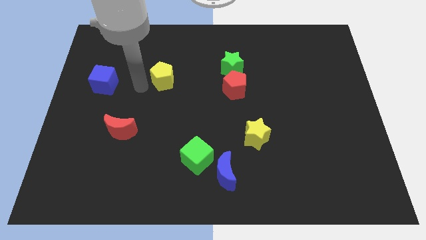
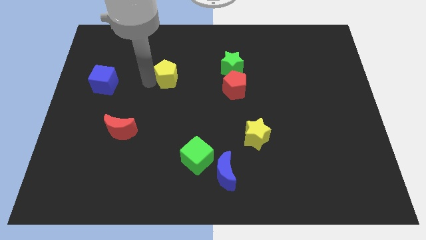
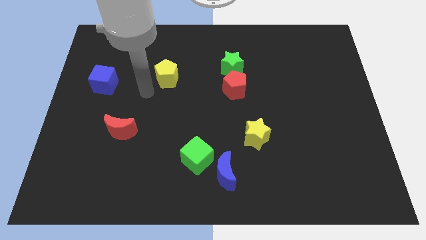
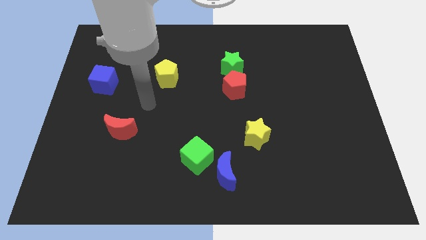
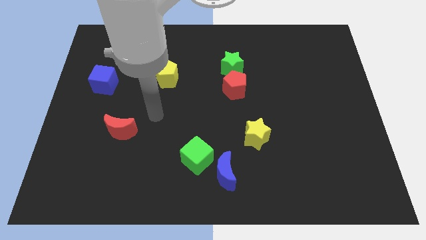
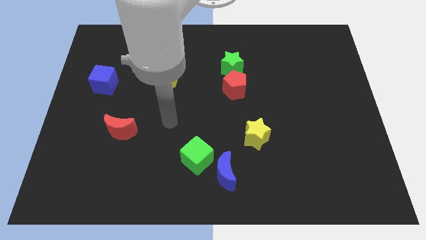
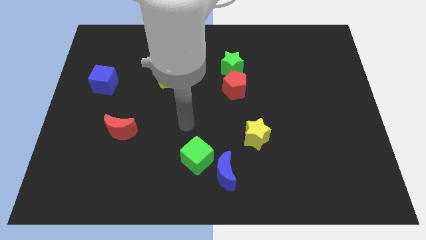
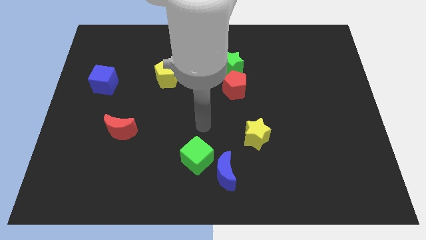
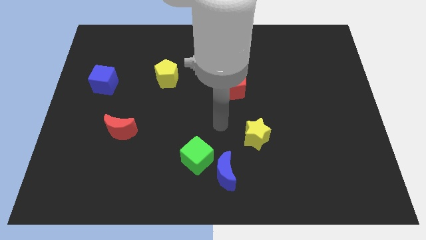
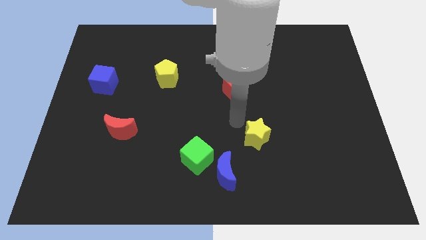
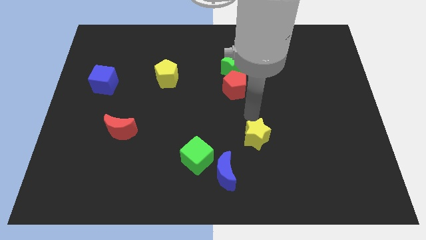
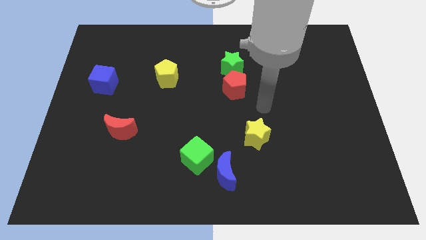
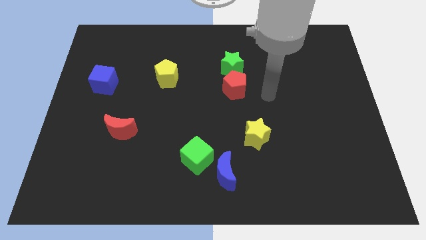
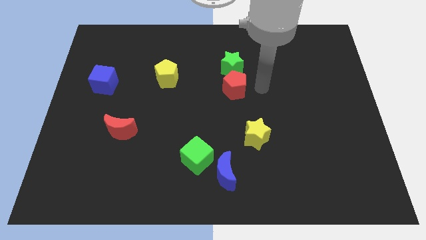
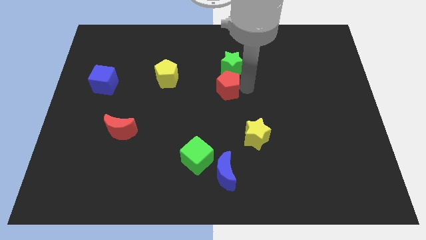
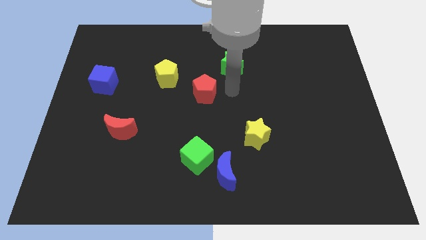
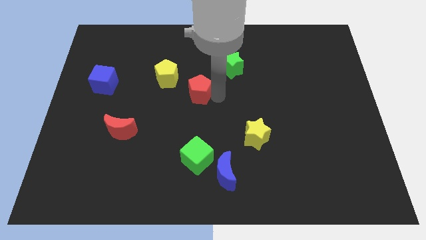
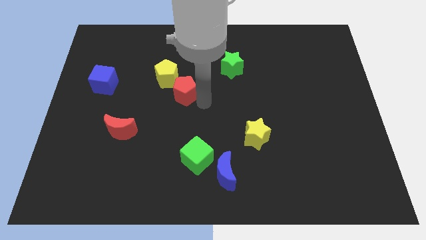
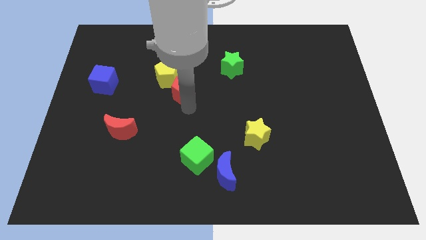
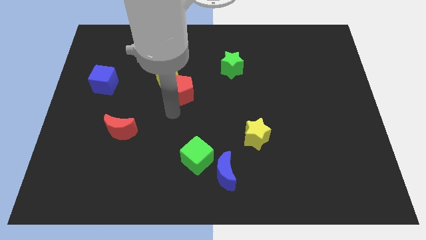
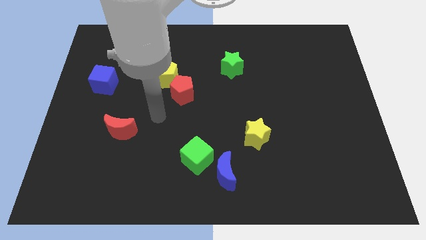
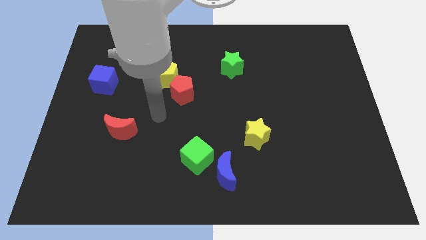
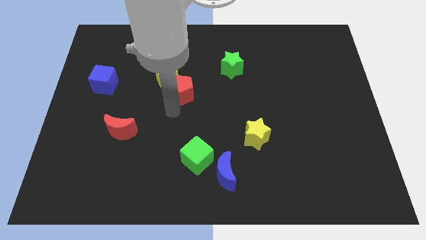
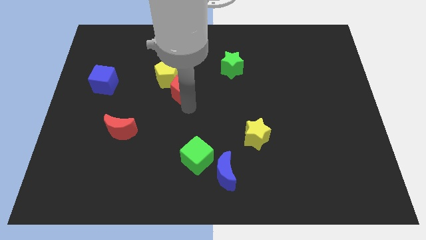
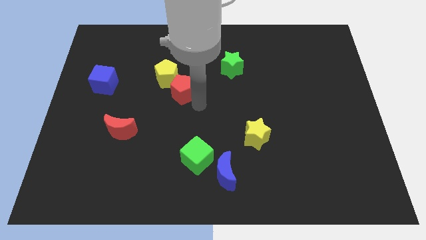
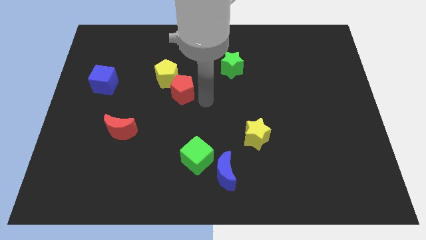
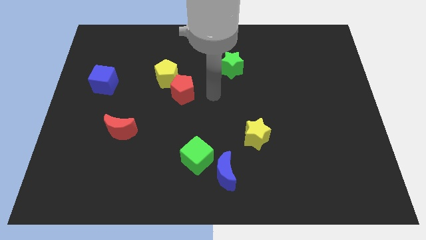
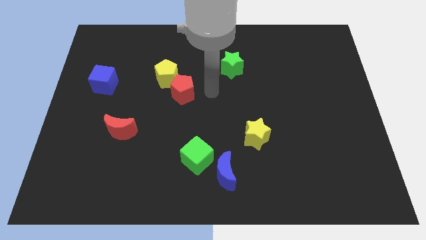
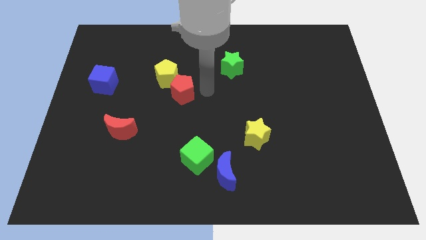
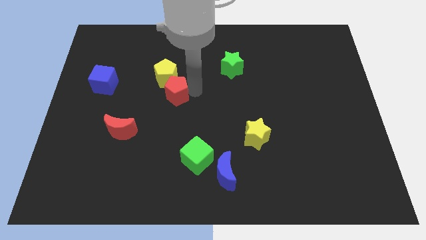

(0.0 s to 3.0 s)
place the red pentagon below the yellow pentagon

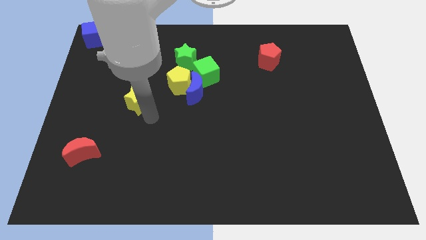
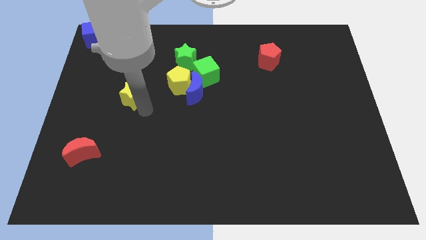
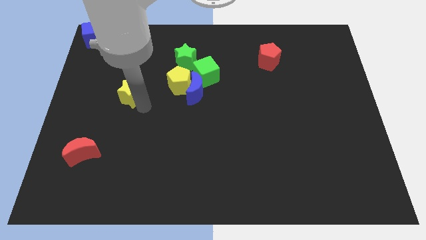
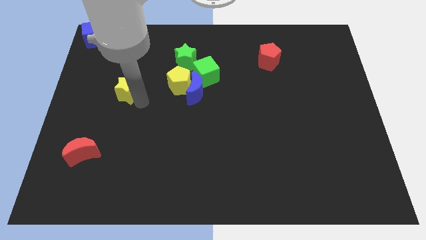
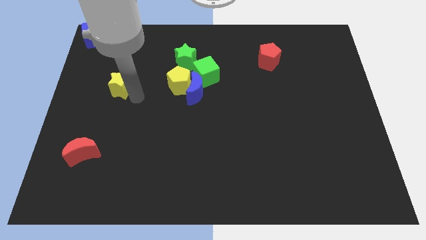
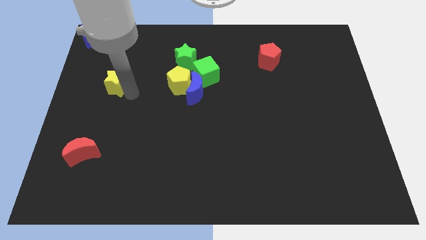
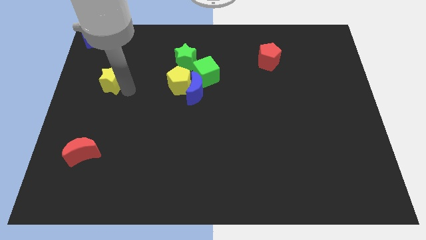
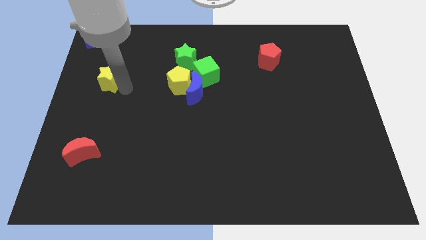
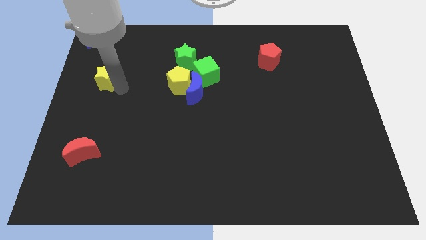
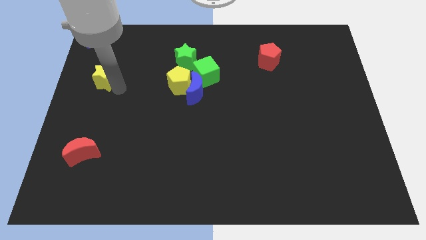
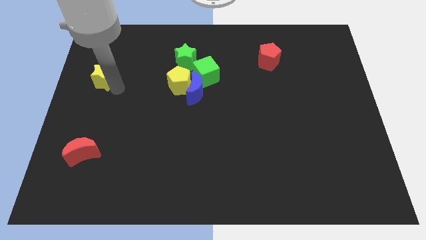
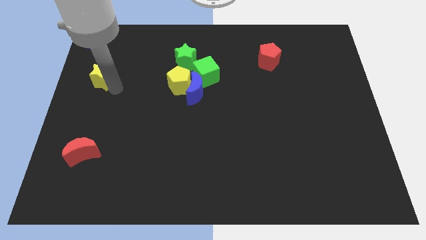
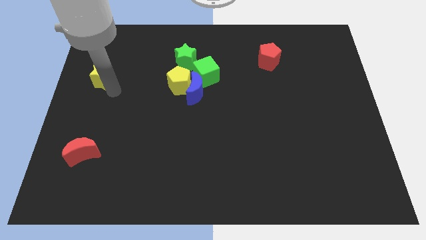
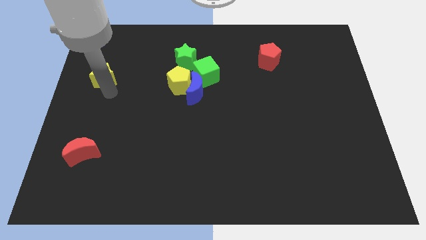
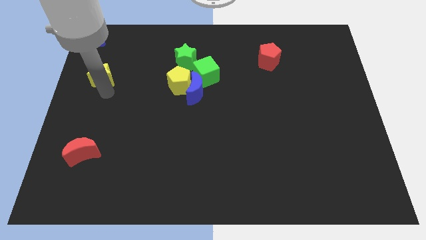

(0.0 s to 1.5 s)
push the yellow star to the left side of the table

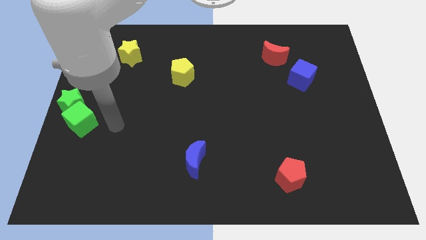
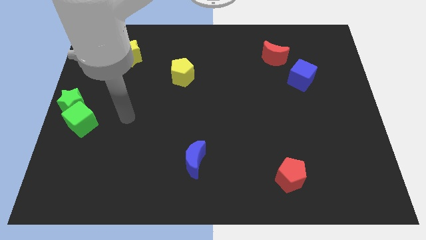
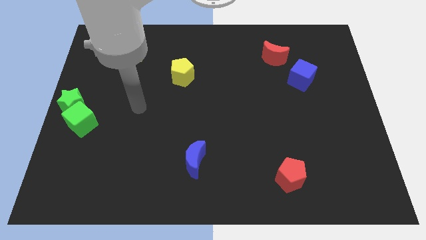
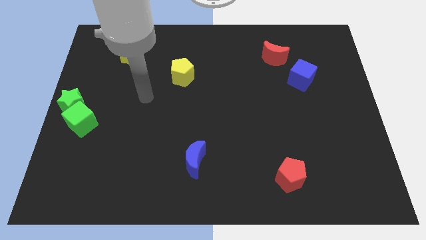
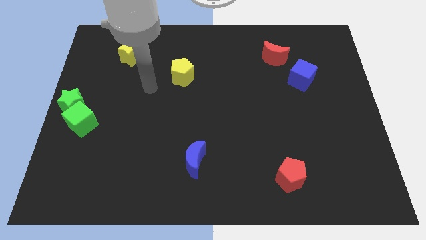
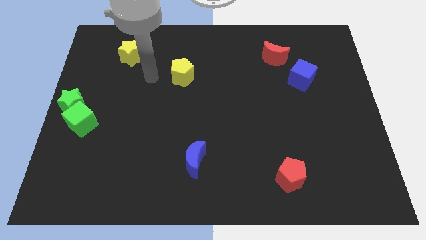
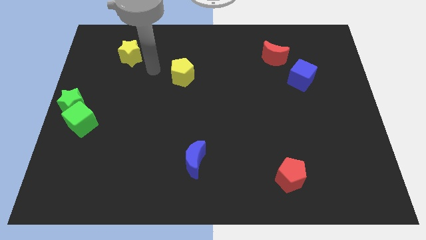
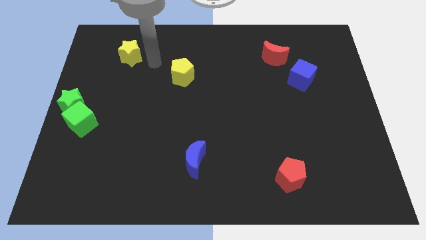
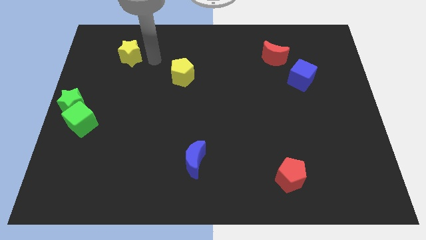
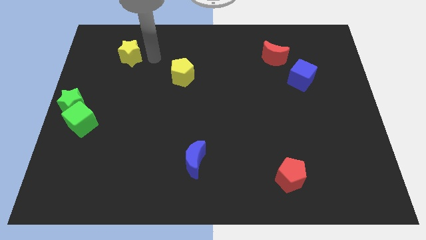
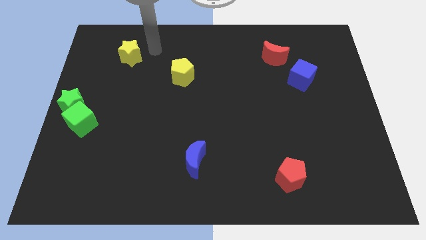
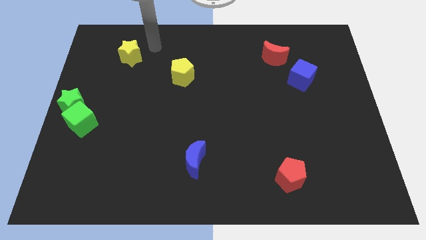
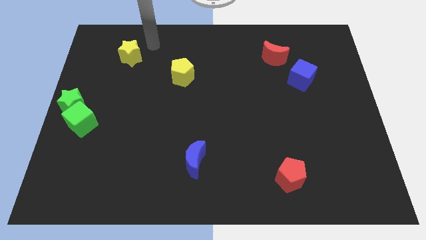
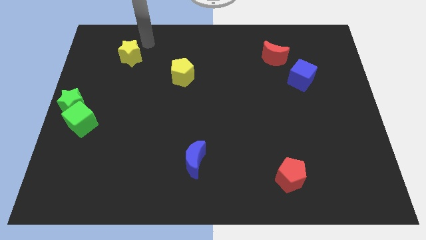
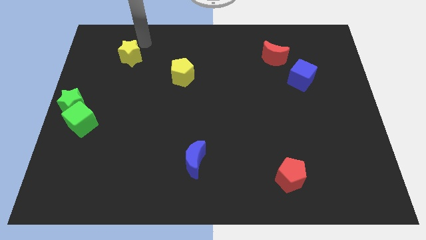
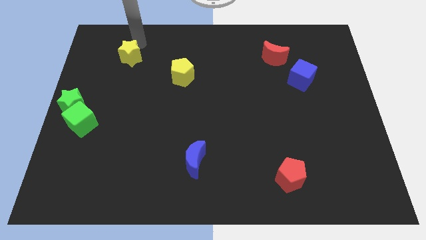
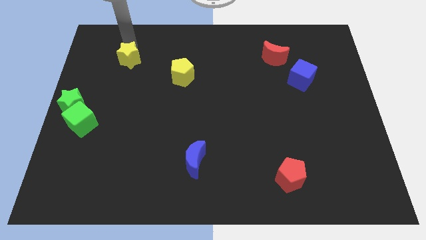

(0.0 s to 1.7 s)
tap the yellow star

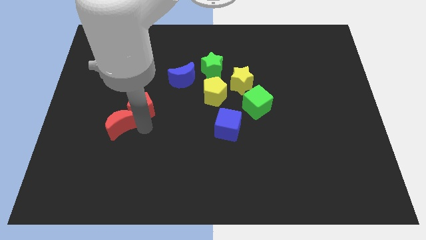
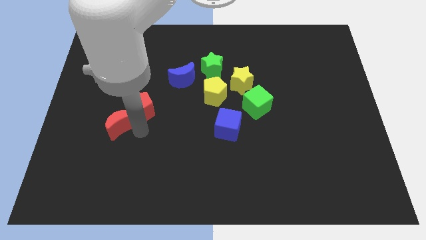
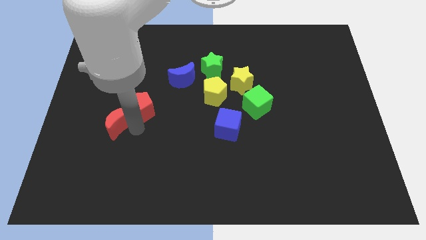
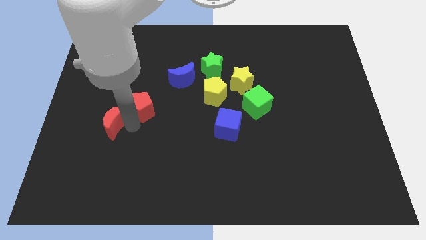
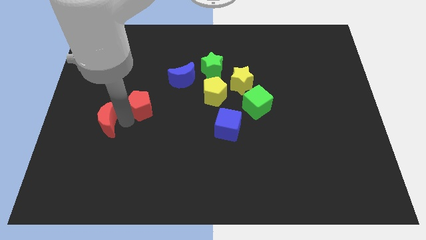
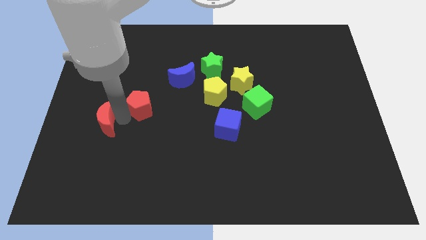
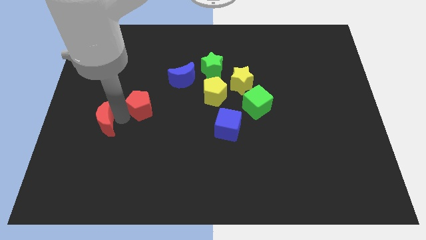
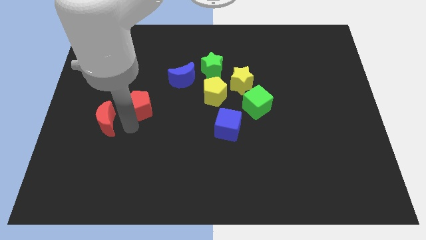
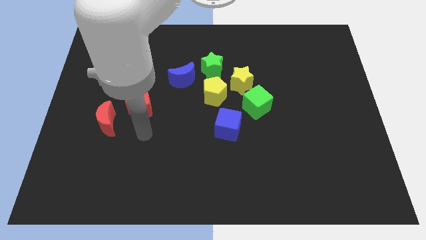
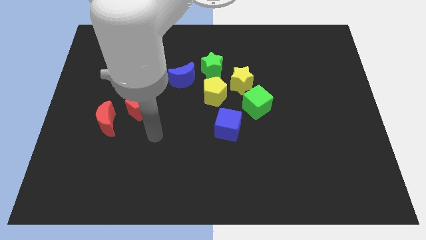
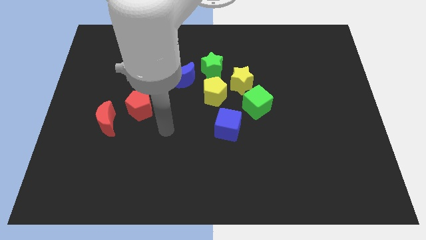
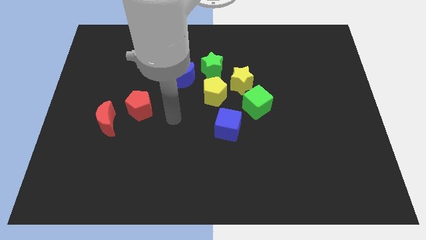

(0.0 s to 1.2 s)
separate red moon from red pentagon

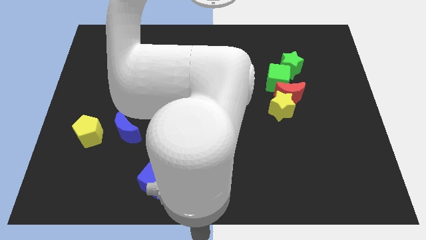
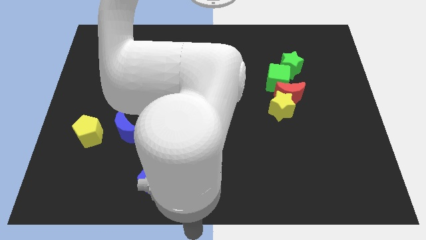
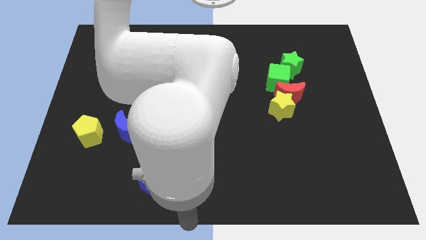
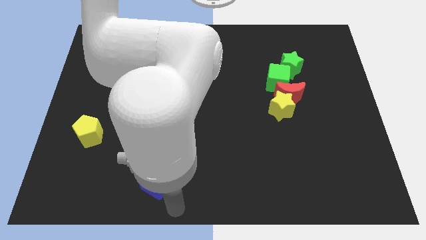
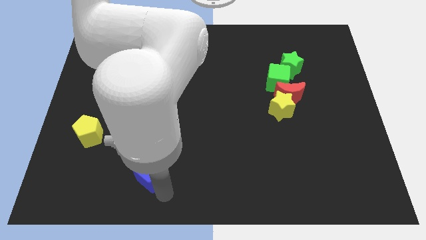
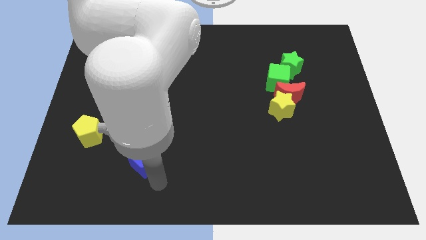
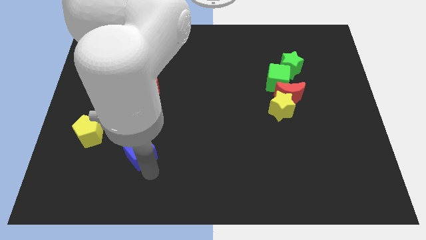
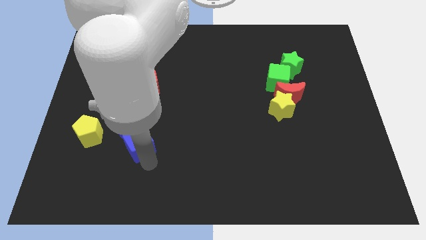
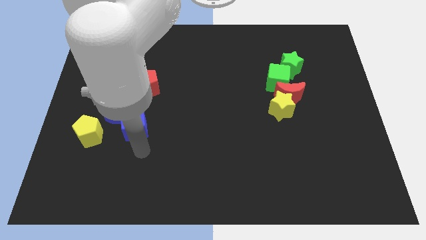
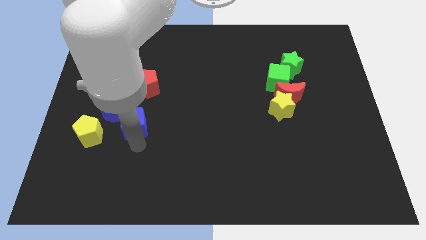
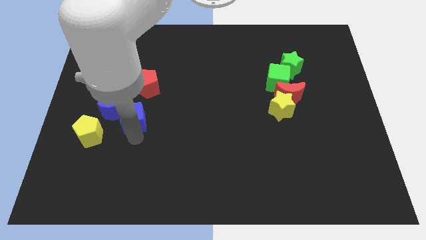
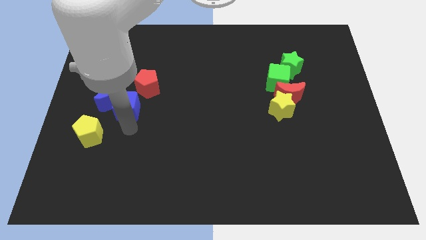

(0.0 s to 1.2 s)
push the blue cube into the blue crescent from the bottom

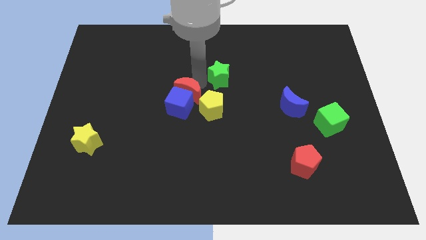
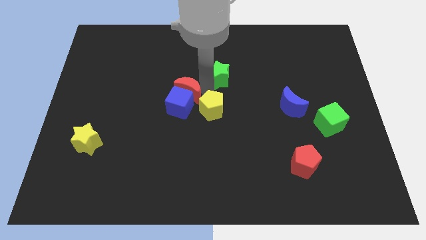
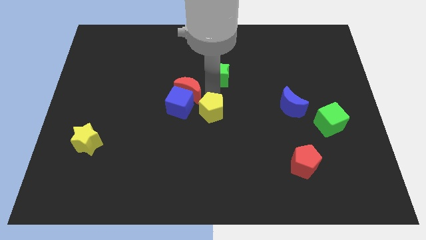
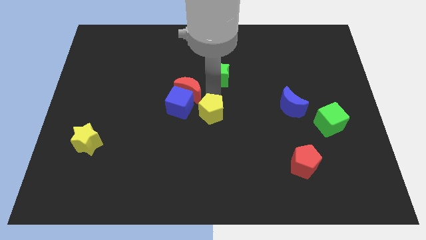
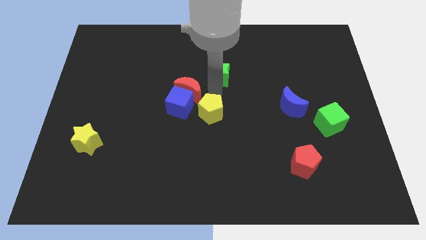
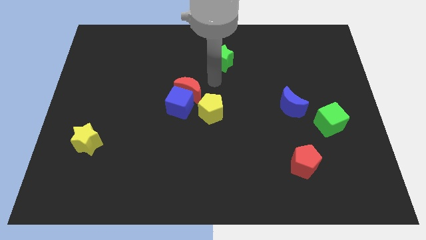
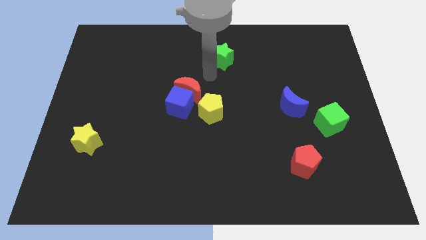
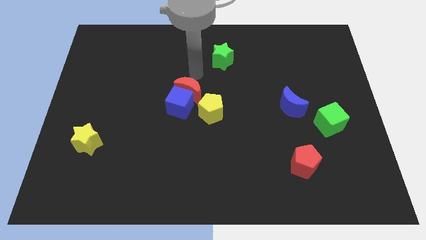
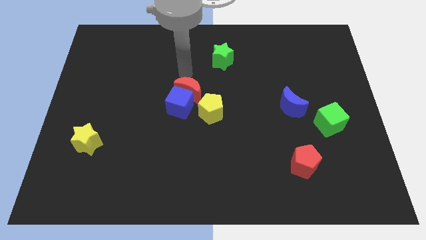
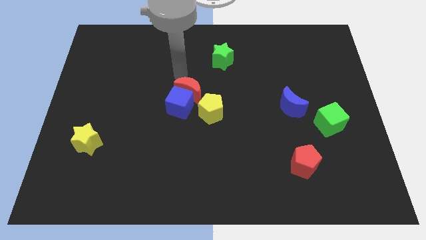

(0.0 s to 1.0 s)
slightly push the green star to the top of the board
